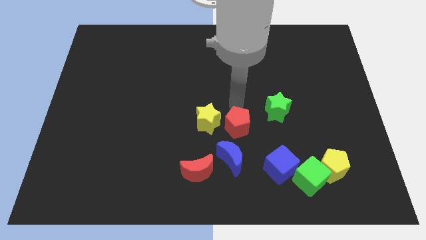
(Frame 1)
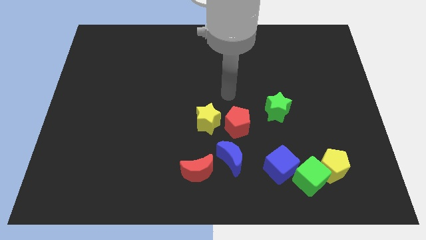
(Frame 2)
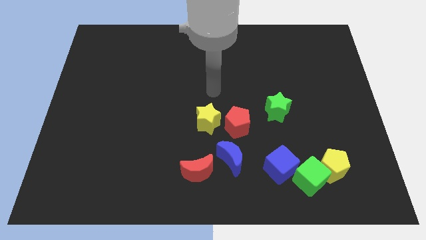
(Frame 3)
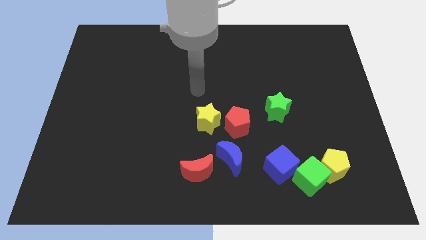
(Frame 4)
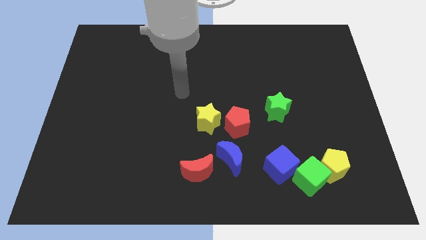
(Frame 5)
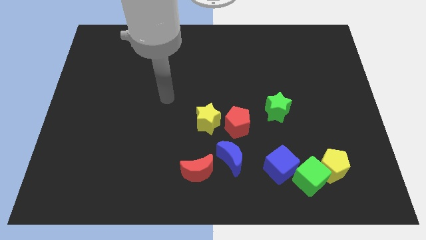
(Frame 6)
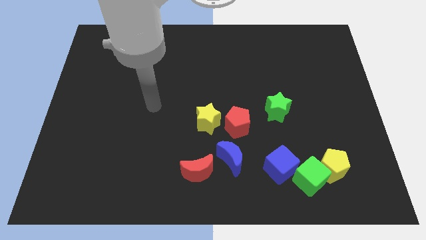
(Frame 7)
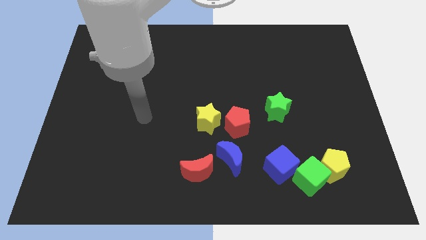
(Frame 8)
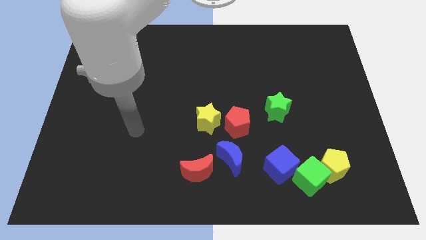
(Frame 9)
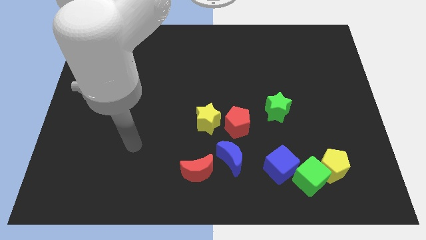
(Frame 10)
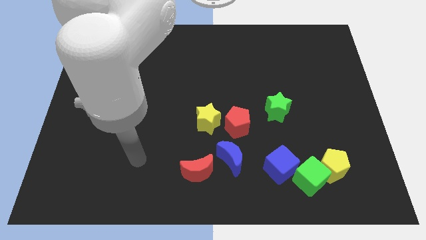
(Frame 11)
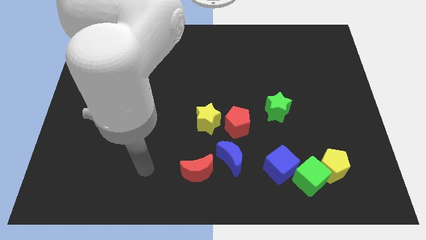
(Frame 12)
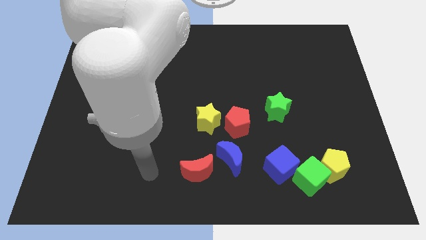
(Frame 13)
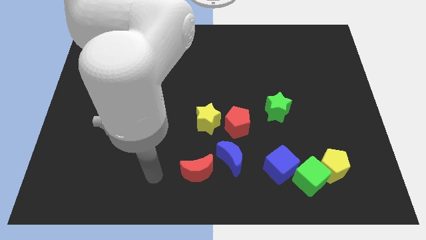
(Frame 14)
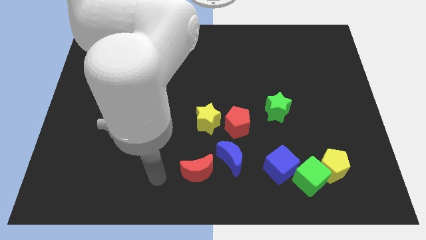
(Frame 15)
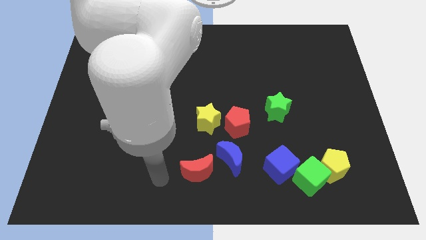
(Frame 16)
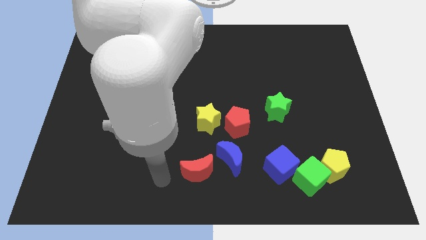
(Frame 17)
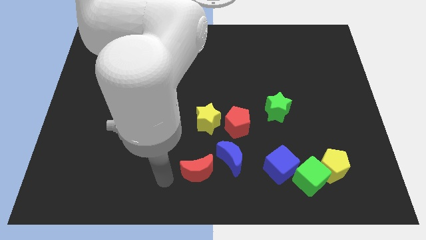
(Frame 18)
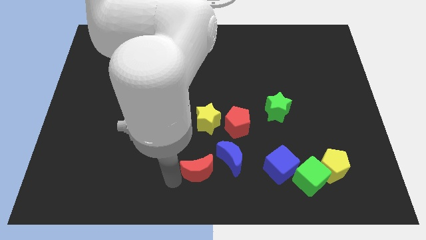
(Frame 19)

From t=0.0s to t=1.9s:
move your hand to the bottom

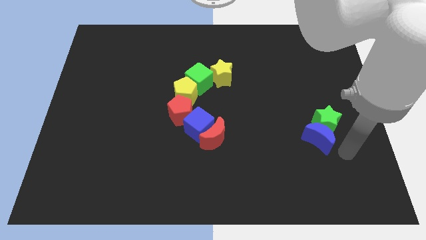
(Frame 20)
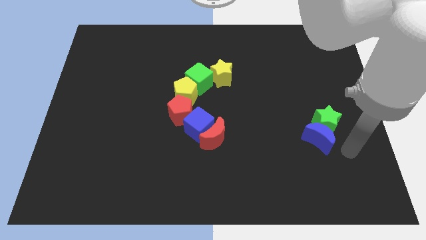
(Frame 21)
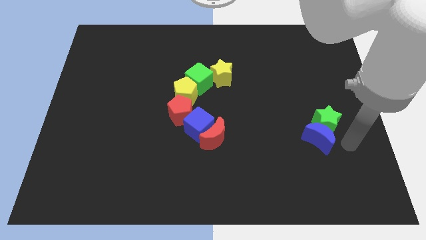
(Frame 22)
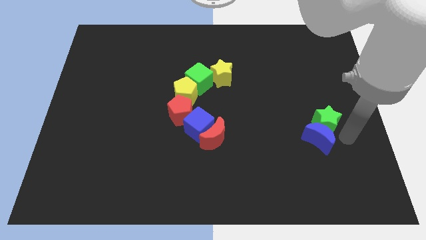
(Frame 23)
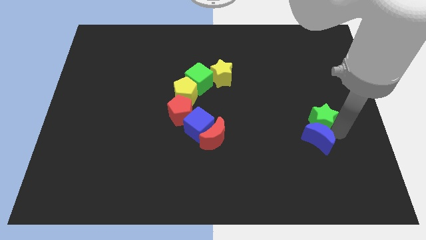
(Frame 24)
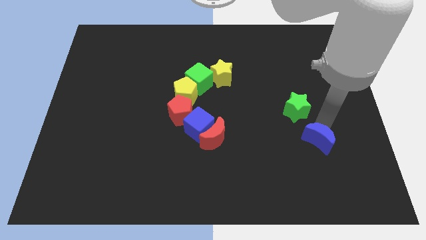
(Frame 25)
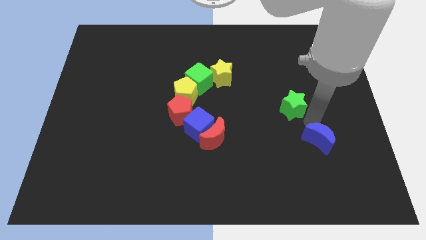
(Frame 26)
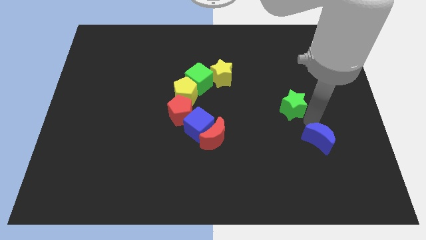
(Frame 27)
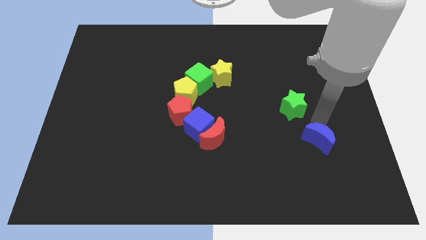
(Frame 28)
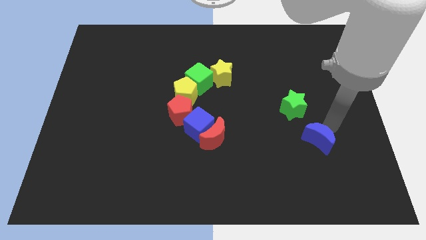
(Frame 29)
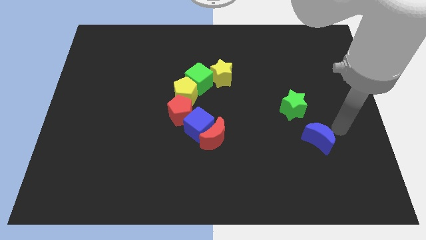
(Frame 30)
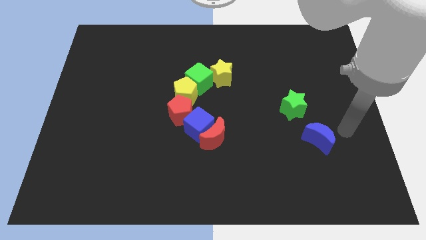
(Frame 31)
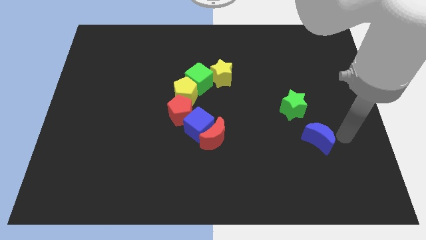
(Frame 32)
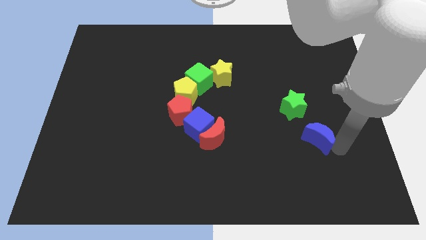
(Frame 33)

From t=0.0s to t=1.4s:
separate the green star from the blue moon

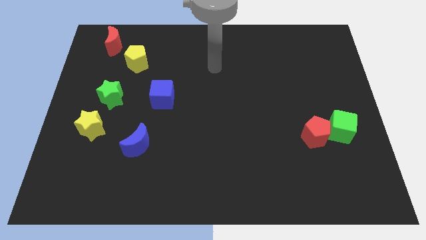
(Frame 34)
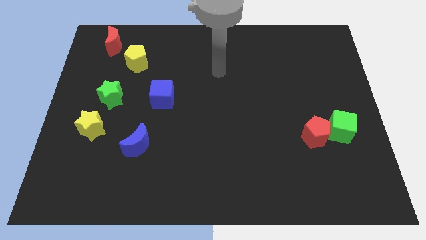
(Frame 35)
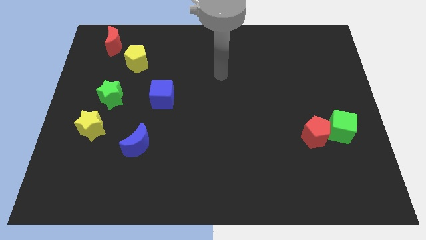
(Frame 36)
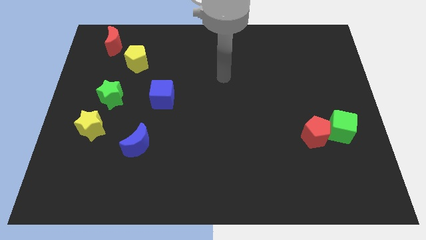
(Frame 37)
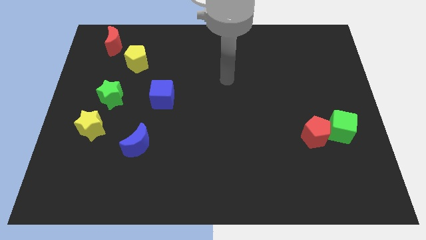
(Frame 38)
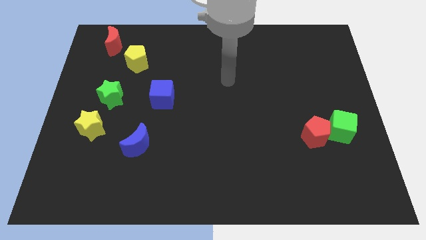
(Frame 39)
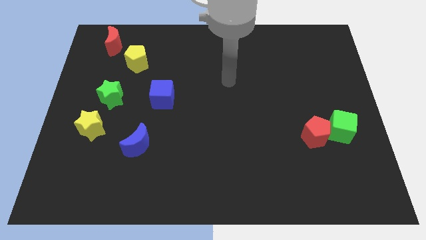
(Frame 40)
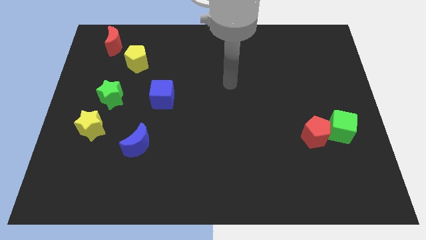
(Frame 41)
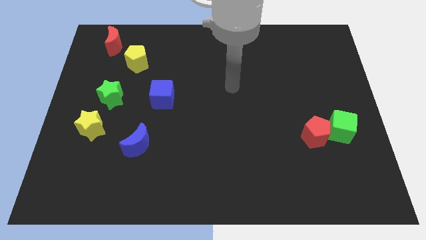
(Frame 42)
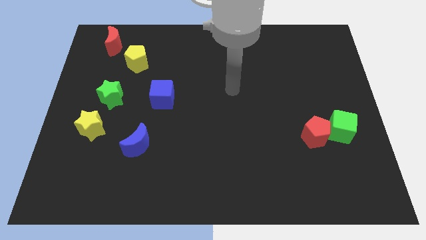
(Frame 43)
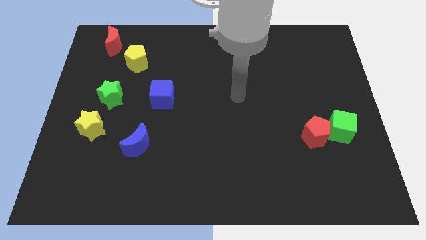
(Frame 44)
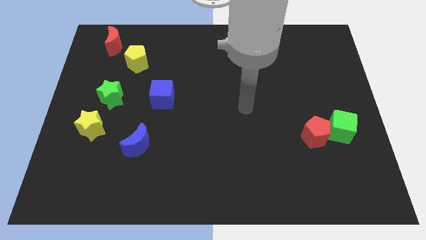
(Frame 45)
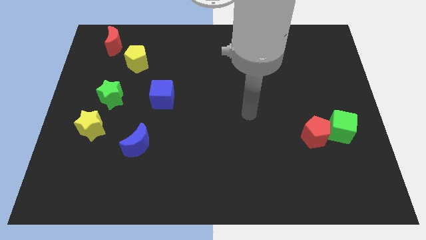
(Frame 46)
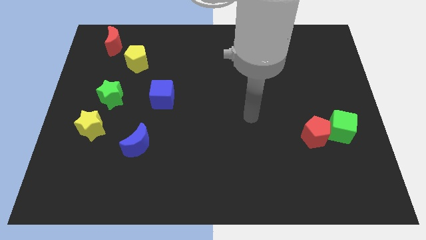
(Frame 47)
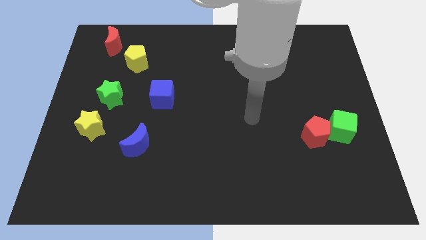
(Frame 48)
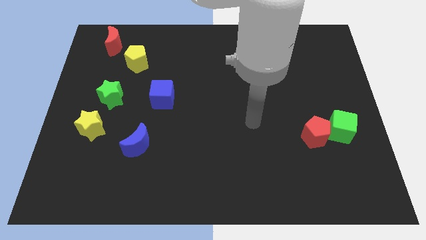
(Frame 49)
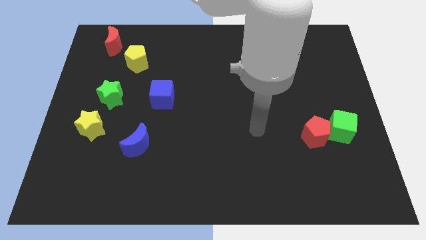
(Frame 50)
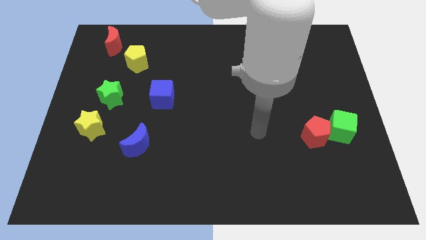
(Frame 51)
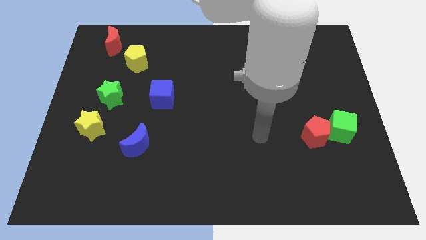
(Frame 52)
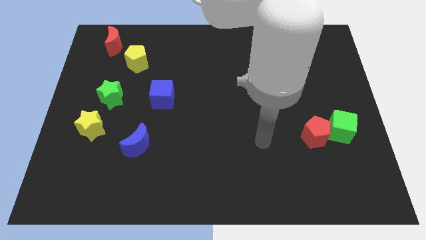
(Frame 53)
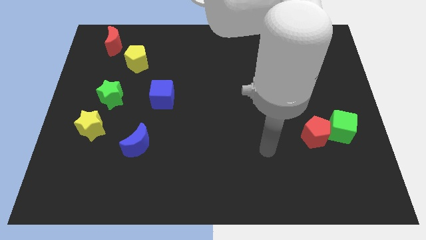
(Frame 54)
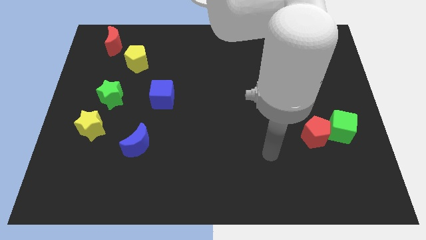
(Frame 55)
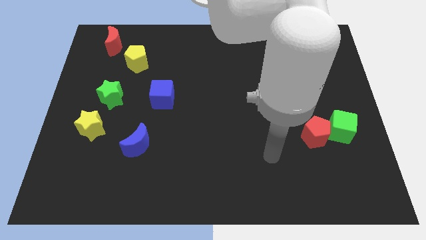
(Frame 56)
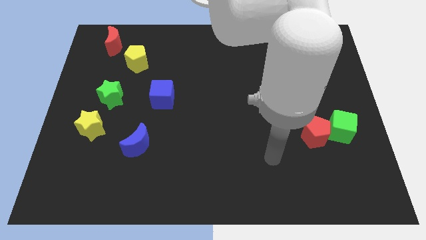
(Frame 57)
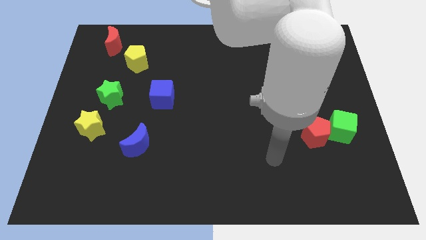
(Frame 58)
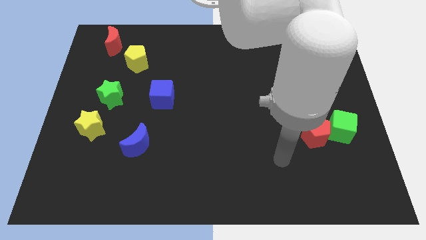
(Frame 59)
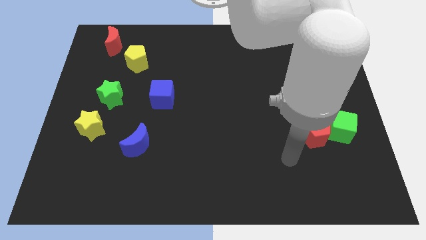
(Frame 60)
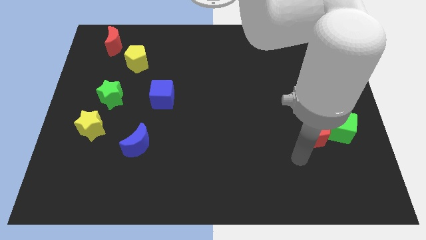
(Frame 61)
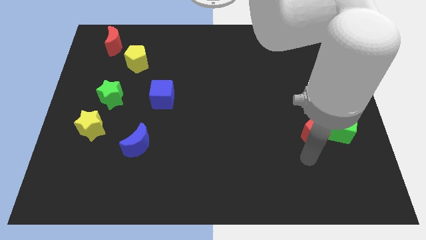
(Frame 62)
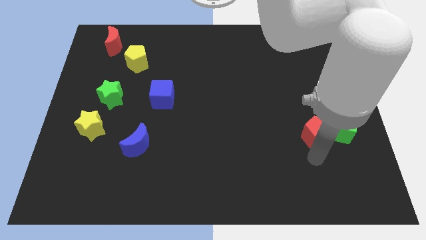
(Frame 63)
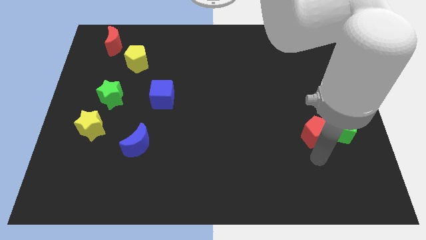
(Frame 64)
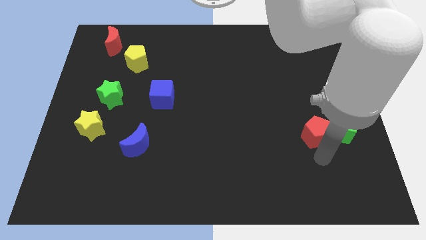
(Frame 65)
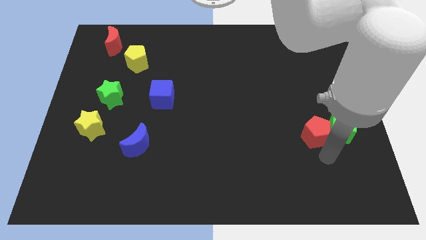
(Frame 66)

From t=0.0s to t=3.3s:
move your arm vertically below the red pentagon

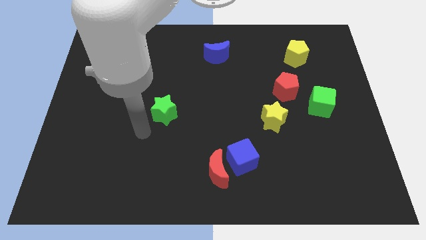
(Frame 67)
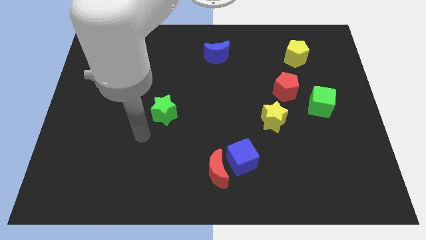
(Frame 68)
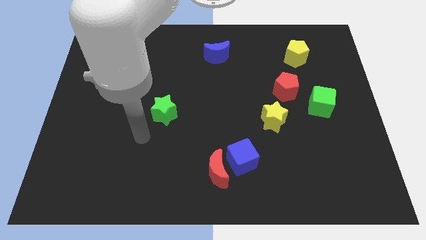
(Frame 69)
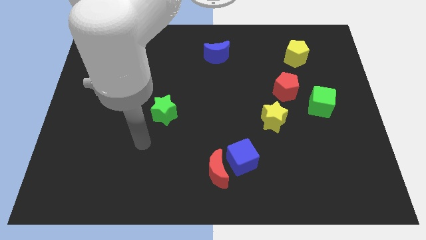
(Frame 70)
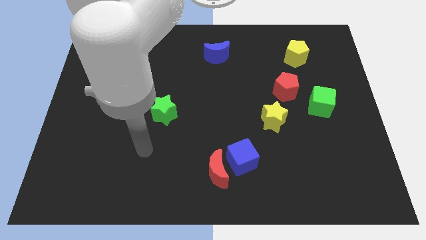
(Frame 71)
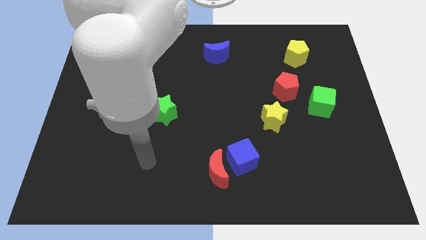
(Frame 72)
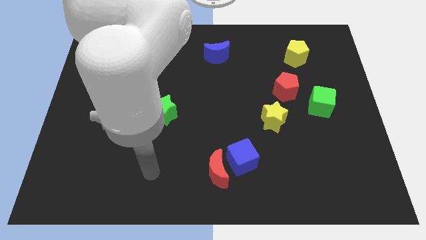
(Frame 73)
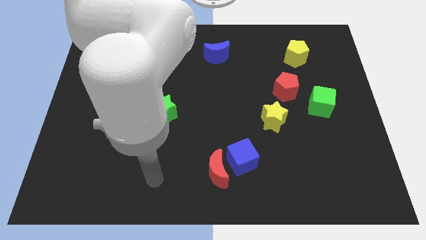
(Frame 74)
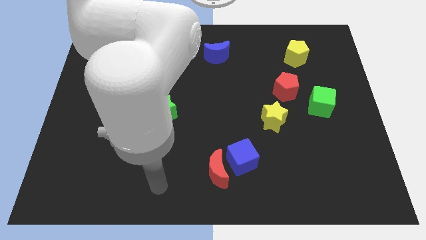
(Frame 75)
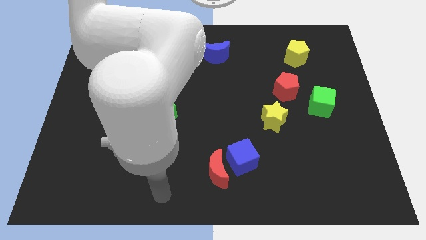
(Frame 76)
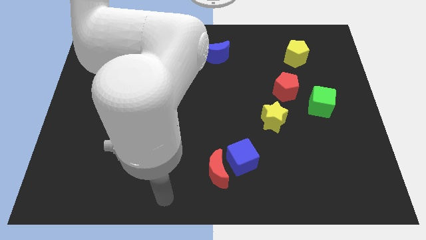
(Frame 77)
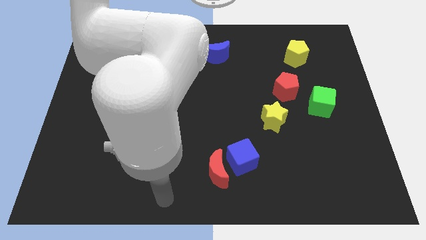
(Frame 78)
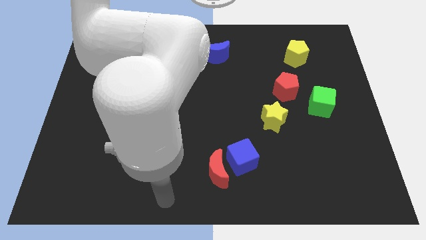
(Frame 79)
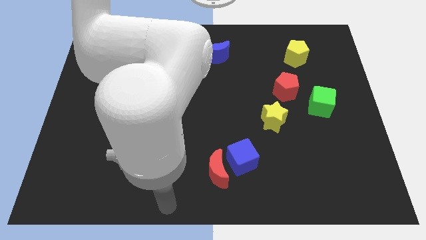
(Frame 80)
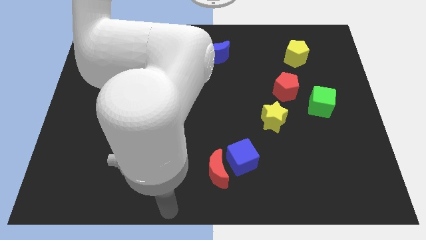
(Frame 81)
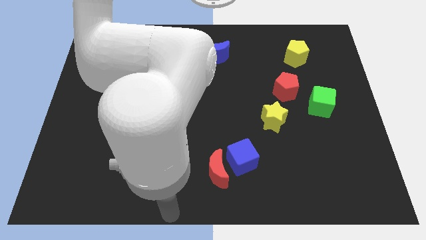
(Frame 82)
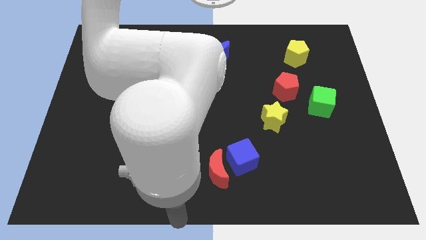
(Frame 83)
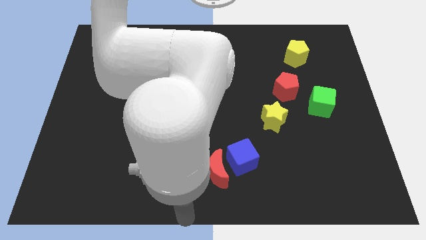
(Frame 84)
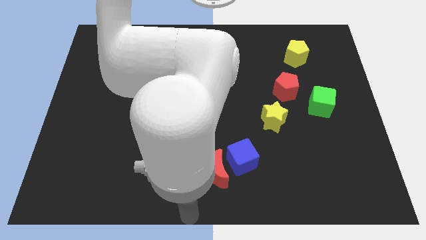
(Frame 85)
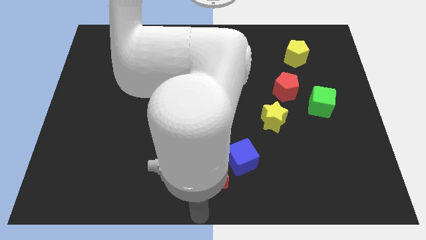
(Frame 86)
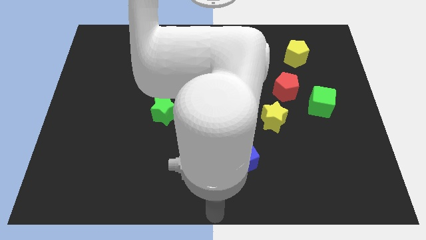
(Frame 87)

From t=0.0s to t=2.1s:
move arm to the bottom centre of the board

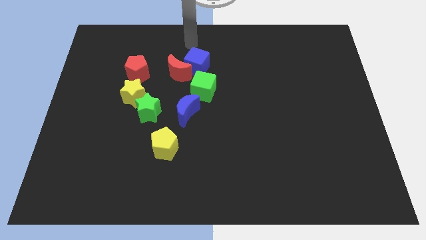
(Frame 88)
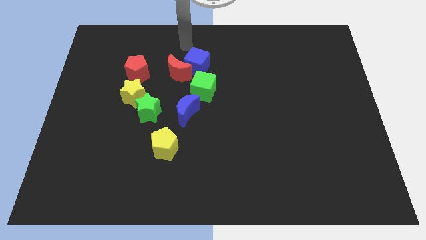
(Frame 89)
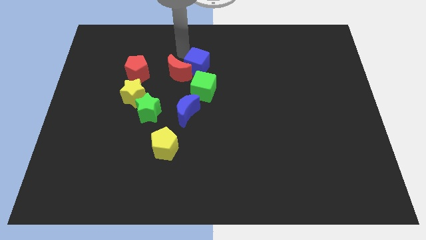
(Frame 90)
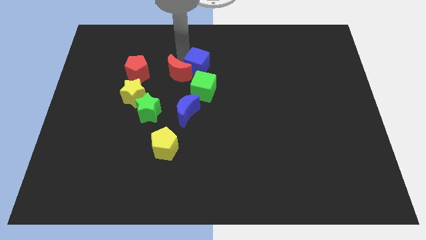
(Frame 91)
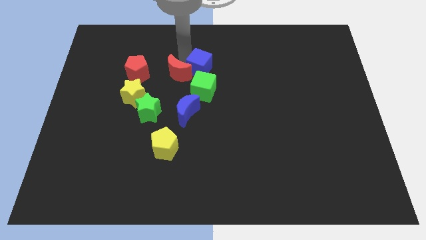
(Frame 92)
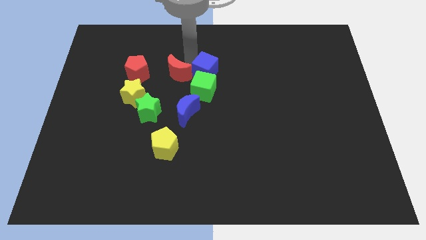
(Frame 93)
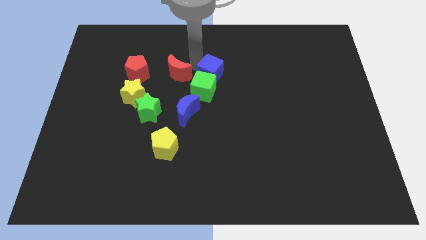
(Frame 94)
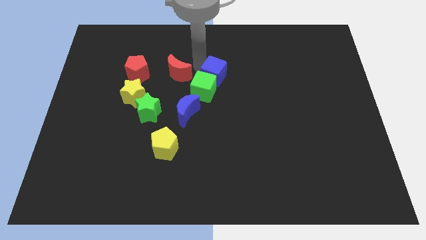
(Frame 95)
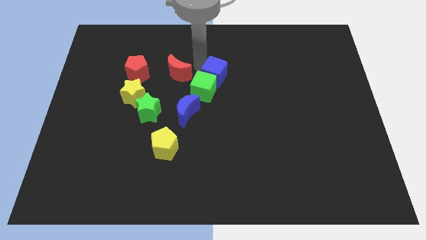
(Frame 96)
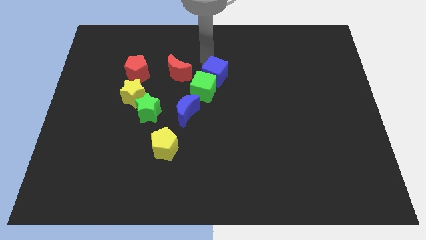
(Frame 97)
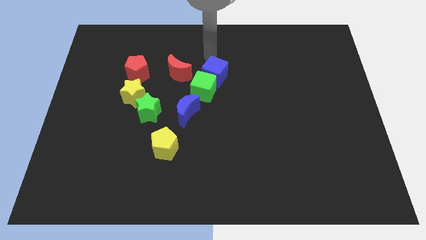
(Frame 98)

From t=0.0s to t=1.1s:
place the blue cube above the green cube
